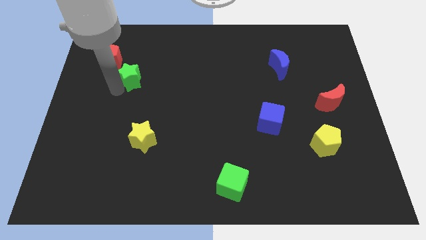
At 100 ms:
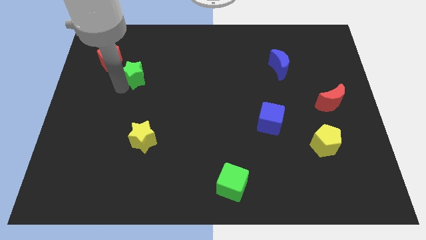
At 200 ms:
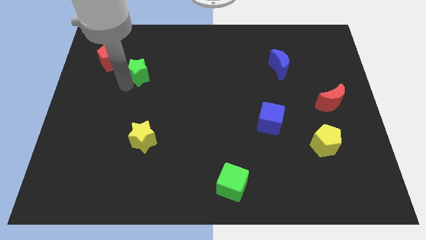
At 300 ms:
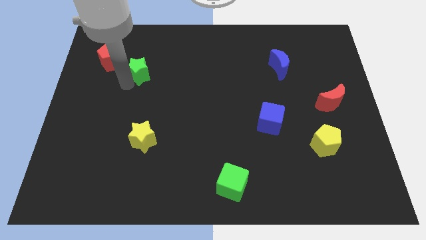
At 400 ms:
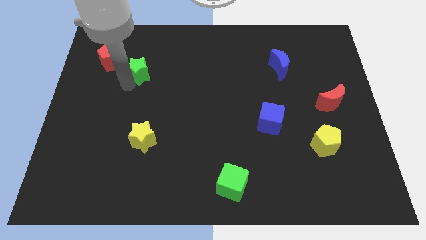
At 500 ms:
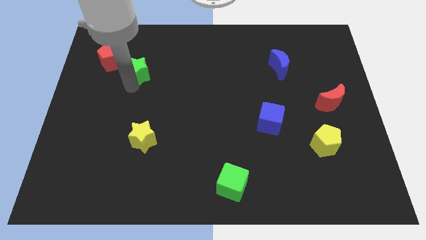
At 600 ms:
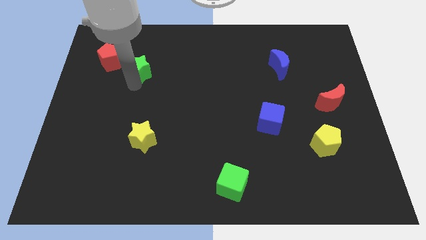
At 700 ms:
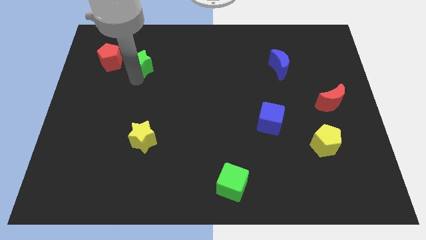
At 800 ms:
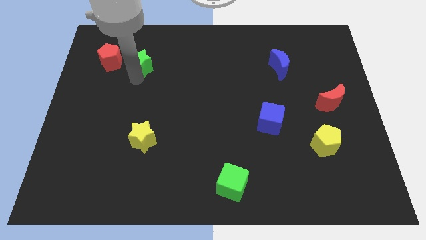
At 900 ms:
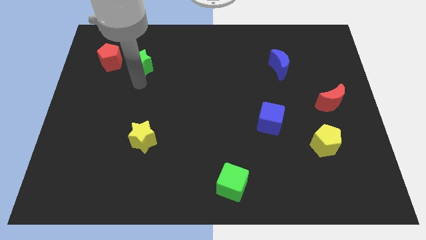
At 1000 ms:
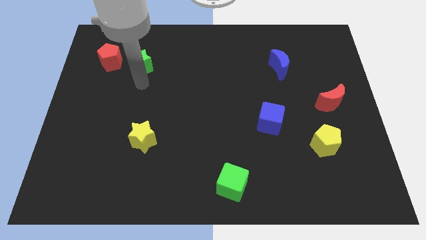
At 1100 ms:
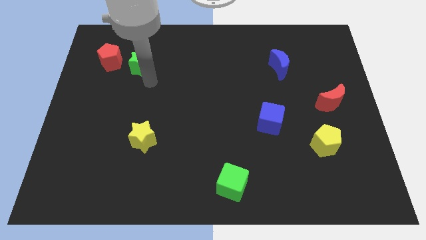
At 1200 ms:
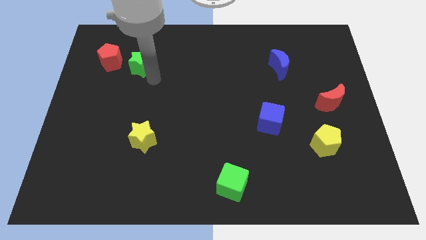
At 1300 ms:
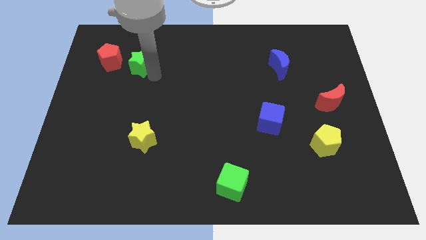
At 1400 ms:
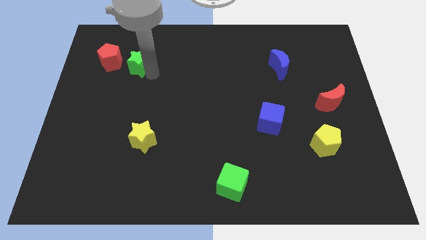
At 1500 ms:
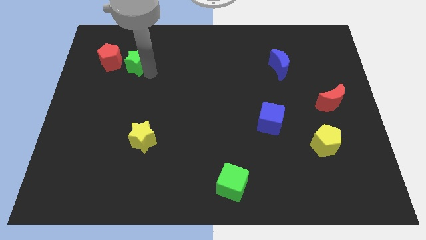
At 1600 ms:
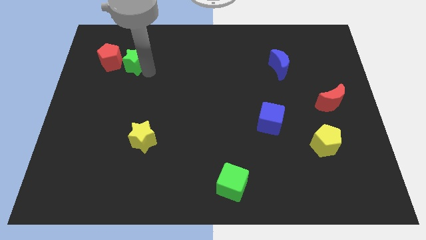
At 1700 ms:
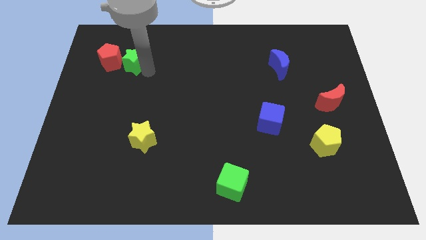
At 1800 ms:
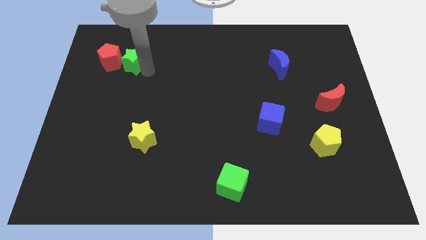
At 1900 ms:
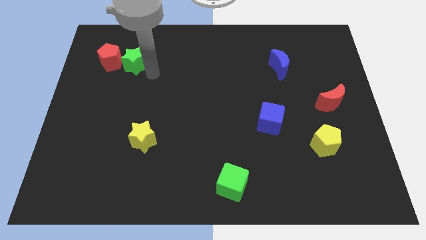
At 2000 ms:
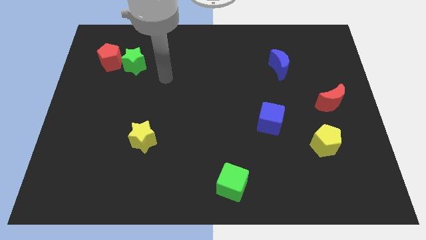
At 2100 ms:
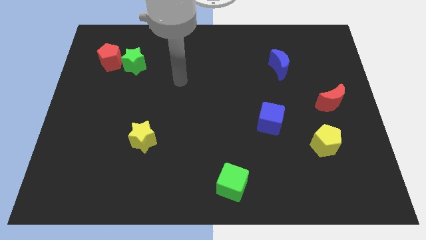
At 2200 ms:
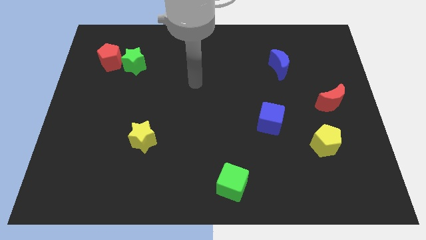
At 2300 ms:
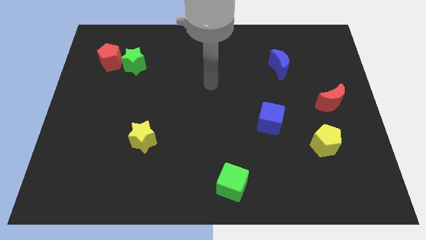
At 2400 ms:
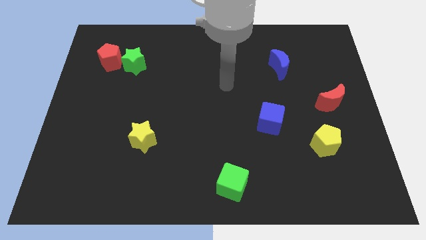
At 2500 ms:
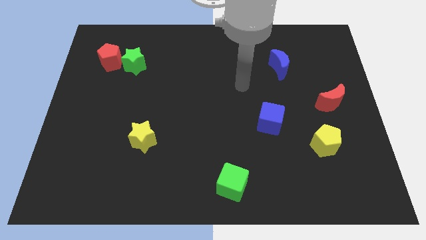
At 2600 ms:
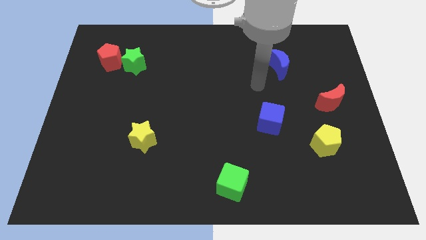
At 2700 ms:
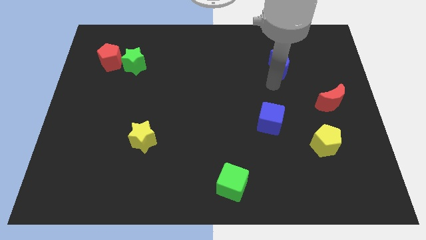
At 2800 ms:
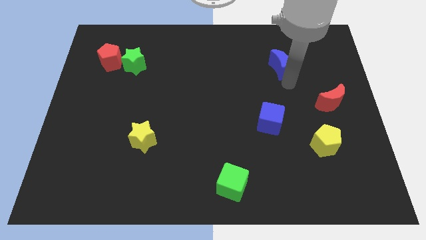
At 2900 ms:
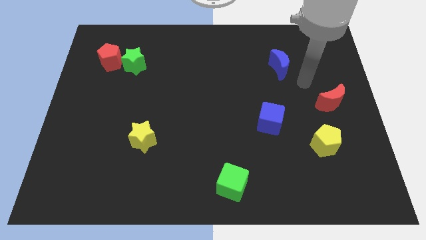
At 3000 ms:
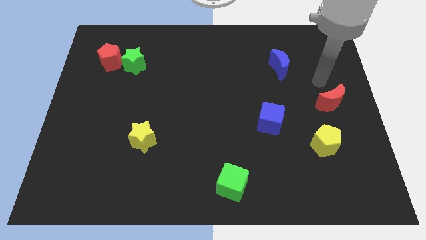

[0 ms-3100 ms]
move your arm towards red crescent

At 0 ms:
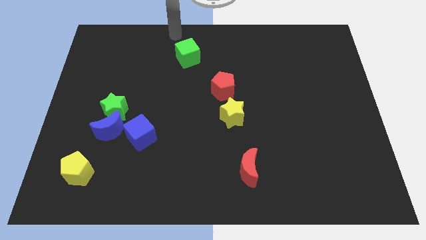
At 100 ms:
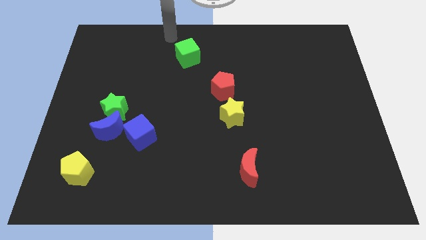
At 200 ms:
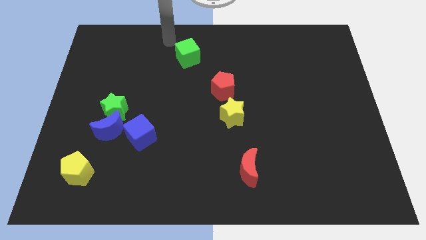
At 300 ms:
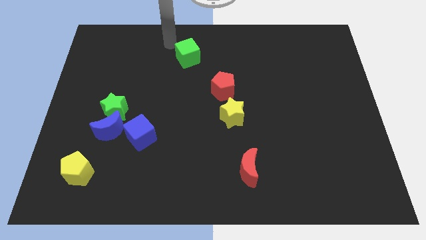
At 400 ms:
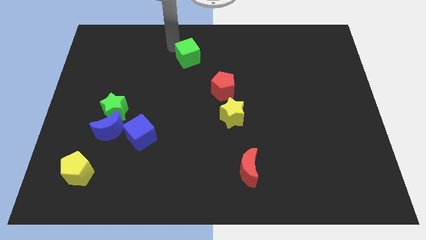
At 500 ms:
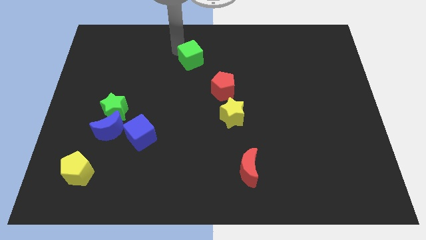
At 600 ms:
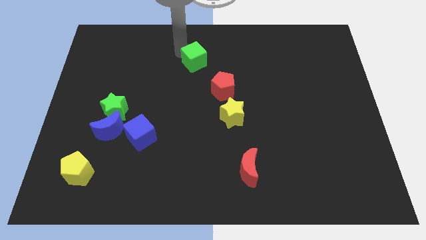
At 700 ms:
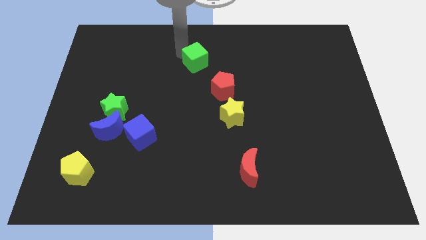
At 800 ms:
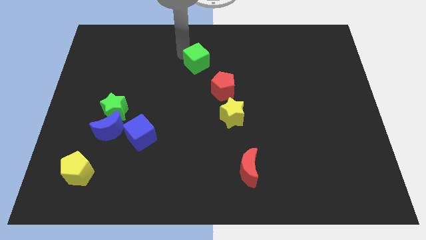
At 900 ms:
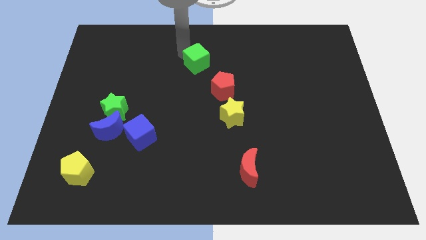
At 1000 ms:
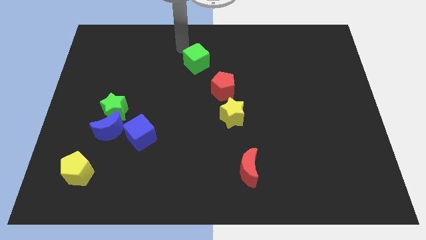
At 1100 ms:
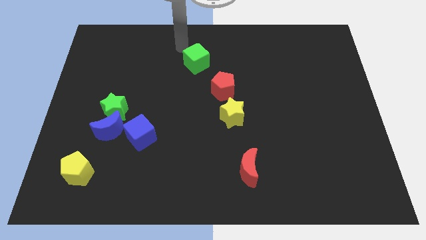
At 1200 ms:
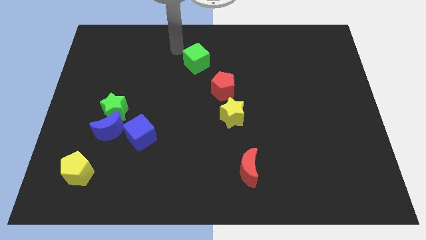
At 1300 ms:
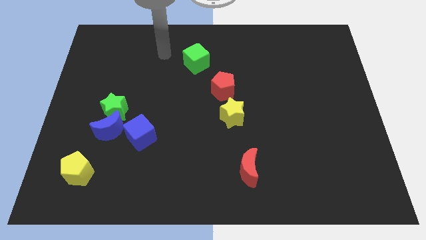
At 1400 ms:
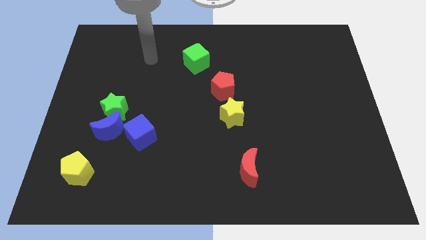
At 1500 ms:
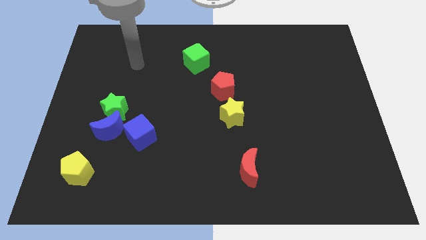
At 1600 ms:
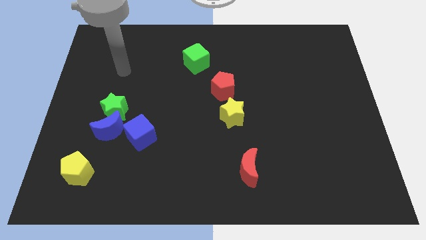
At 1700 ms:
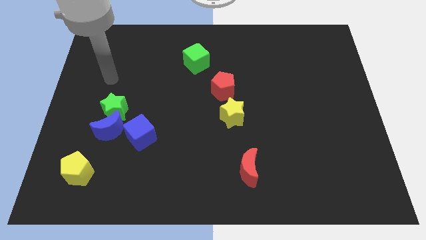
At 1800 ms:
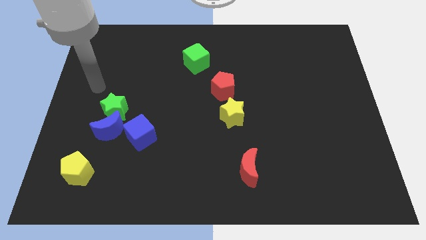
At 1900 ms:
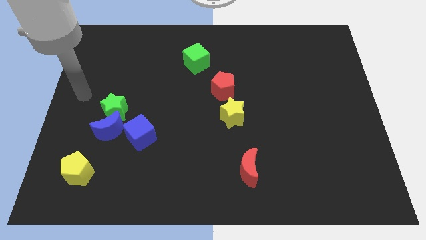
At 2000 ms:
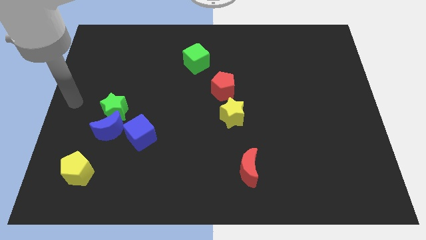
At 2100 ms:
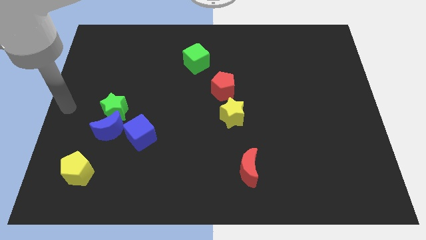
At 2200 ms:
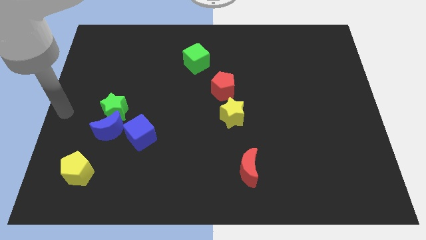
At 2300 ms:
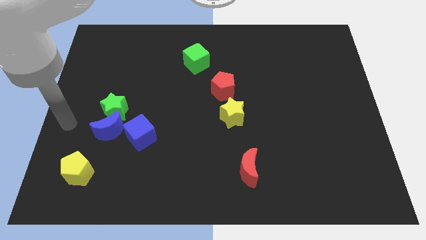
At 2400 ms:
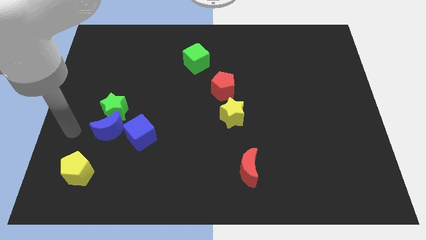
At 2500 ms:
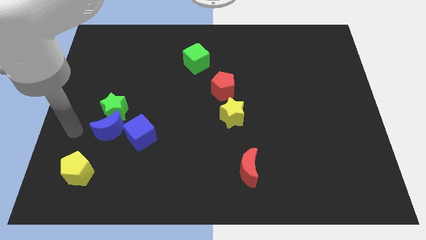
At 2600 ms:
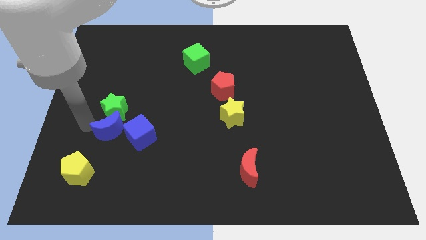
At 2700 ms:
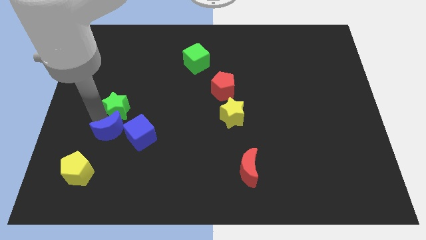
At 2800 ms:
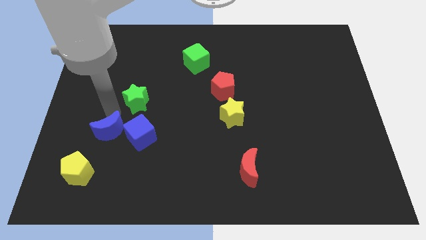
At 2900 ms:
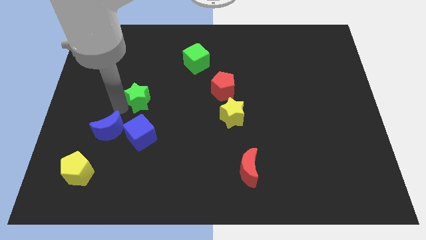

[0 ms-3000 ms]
push green star above blue cube

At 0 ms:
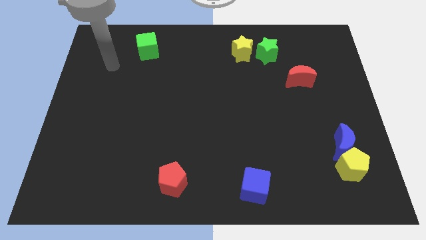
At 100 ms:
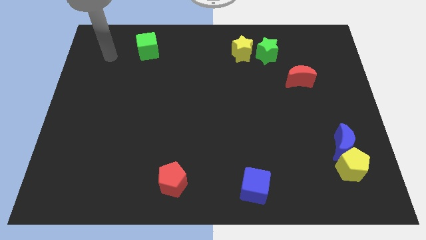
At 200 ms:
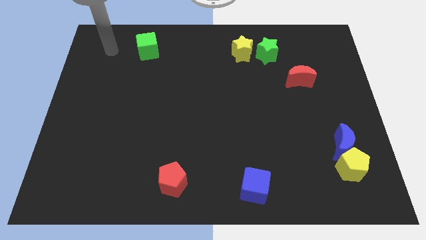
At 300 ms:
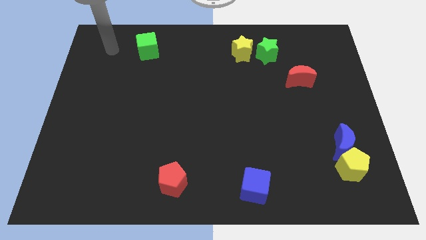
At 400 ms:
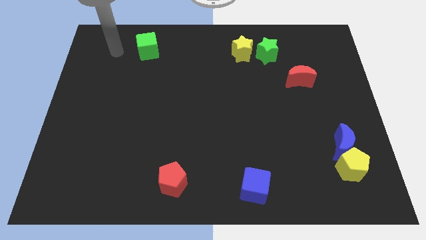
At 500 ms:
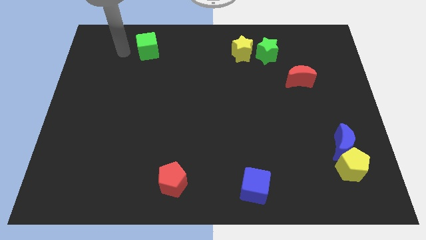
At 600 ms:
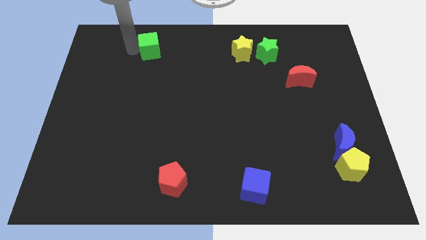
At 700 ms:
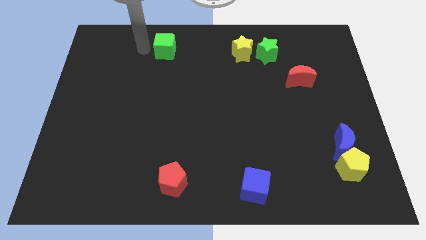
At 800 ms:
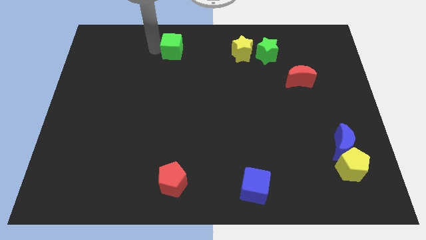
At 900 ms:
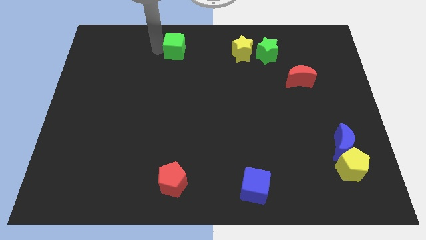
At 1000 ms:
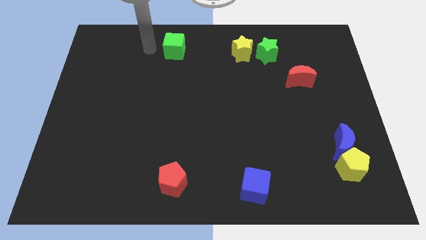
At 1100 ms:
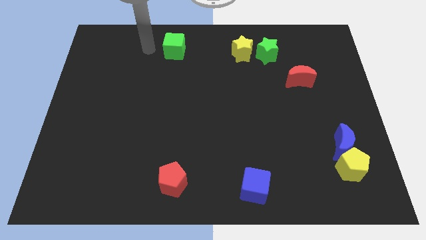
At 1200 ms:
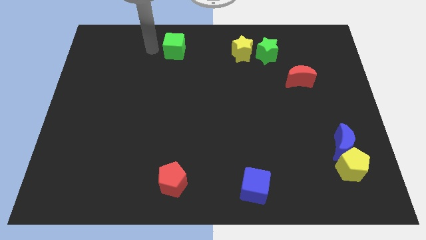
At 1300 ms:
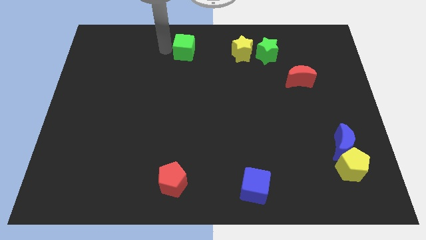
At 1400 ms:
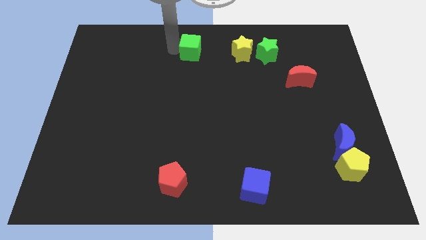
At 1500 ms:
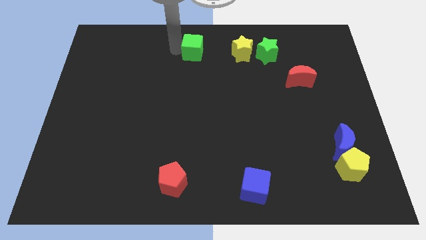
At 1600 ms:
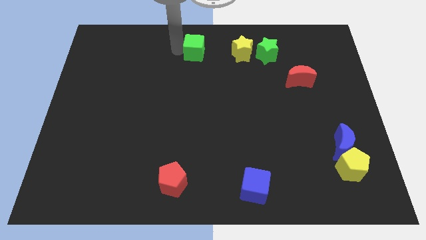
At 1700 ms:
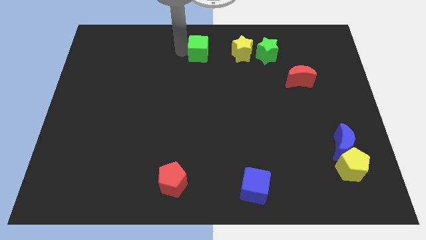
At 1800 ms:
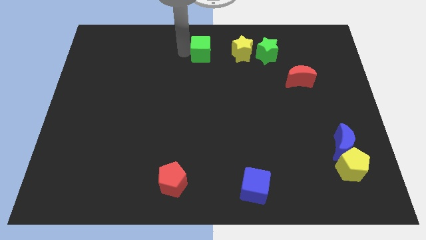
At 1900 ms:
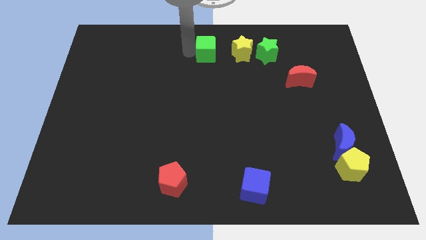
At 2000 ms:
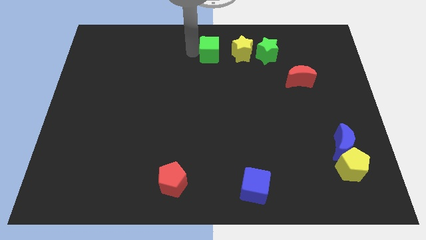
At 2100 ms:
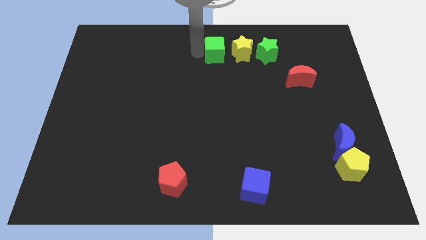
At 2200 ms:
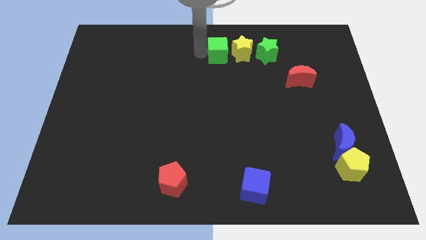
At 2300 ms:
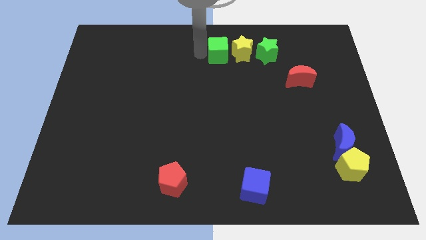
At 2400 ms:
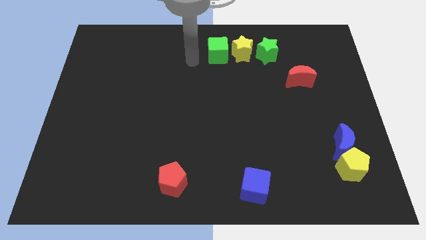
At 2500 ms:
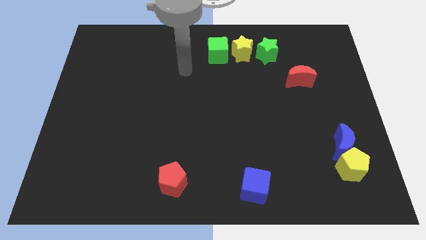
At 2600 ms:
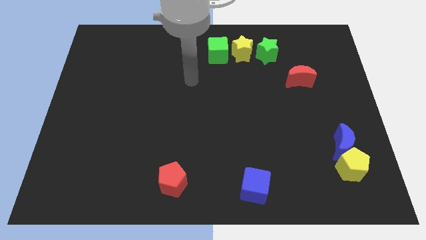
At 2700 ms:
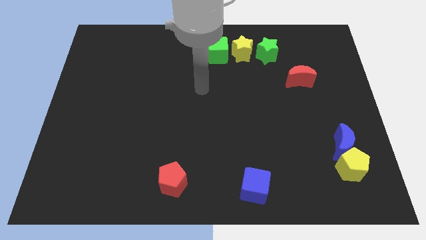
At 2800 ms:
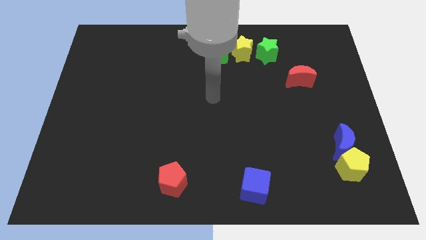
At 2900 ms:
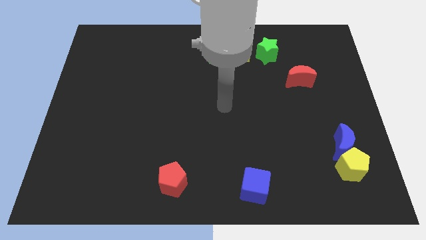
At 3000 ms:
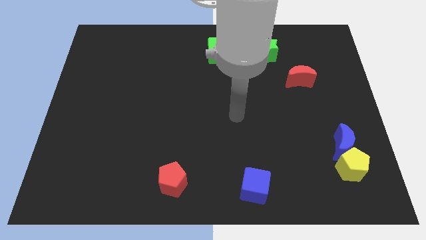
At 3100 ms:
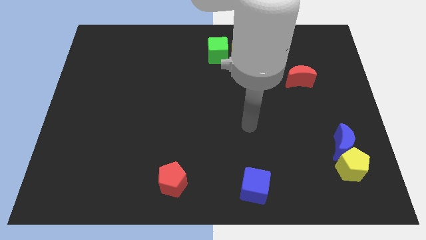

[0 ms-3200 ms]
move green cube to the left of yellow star
